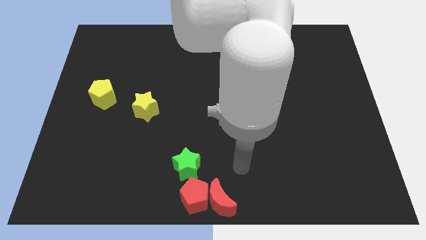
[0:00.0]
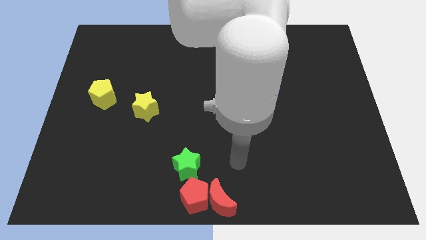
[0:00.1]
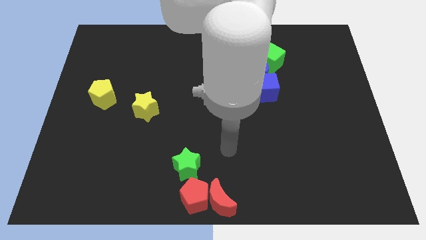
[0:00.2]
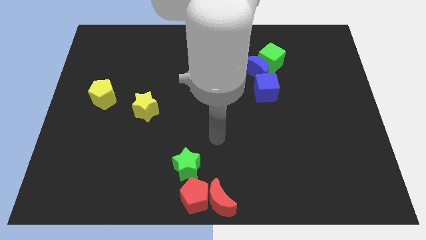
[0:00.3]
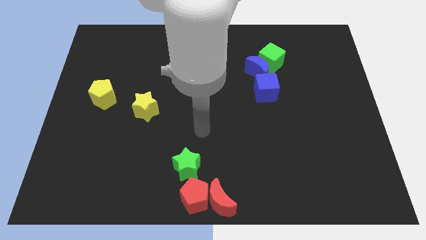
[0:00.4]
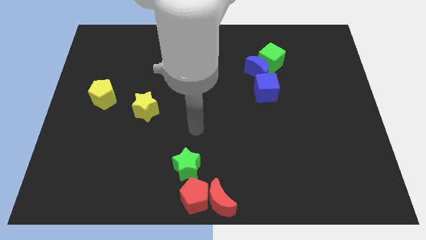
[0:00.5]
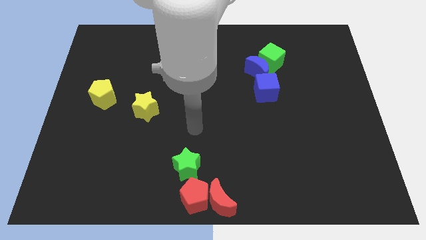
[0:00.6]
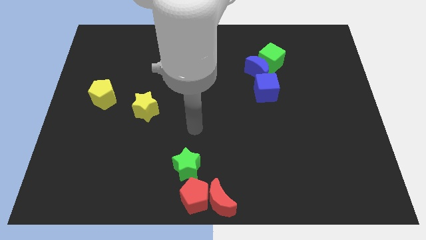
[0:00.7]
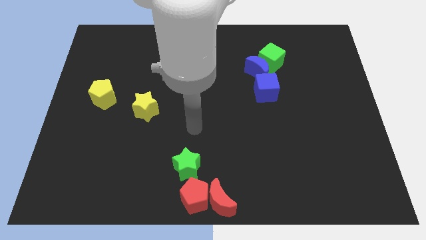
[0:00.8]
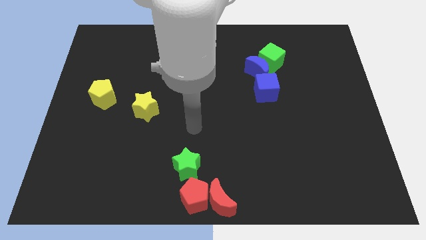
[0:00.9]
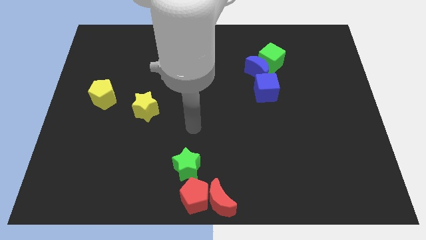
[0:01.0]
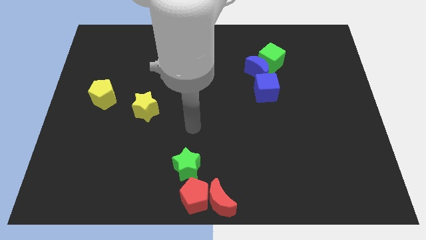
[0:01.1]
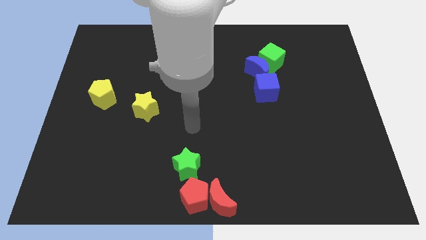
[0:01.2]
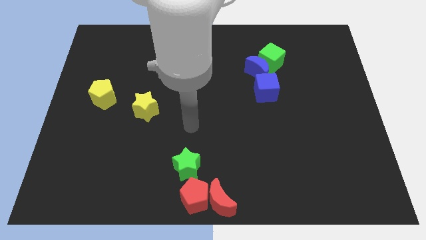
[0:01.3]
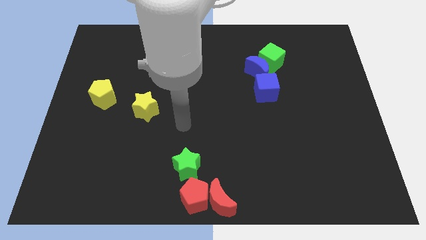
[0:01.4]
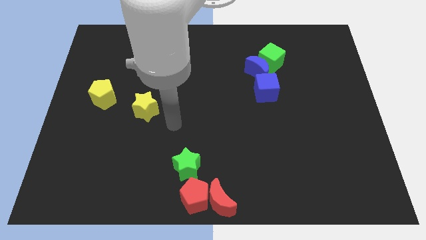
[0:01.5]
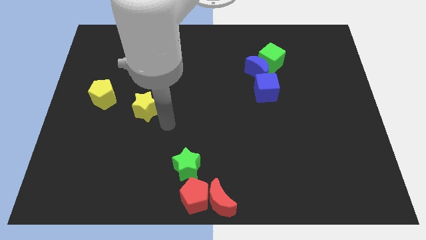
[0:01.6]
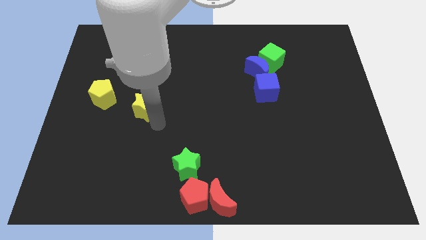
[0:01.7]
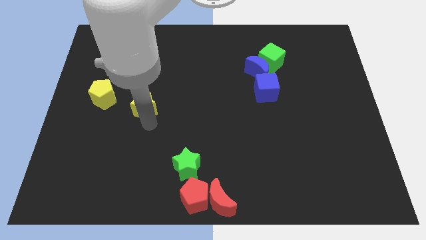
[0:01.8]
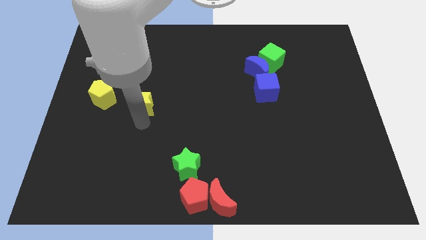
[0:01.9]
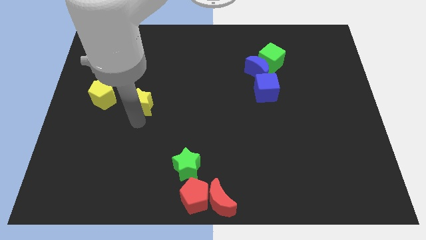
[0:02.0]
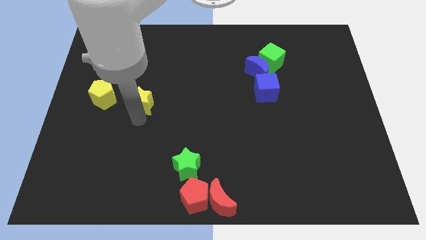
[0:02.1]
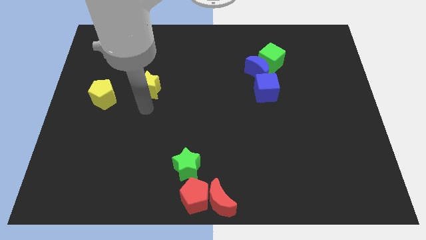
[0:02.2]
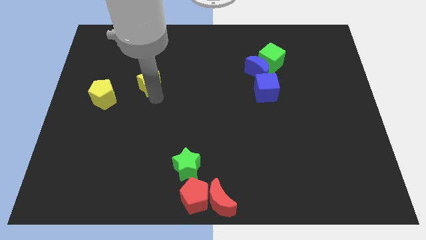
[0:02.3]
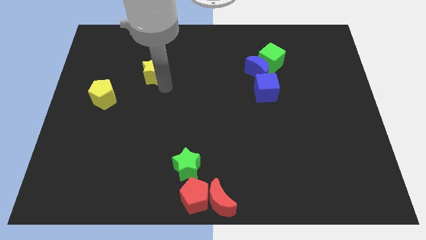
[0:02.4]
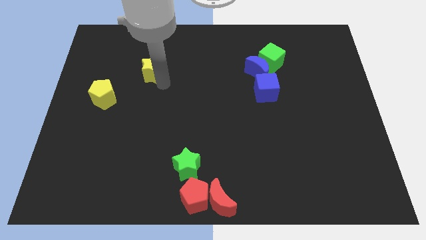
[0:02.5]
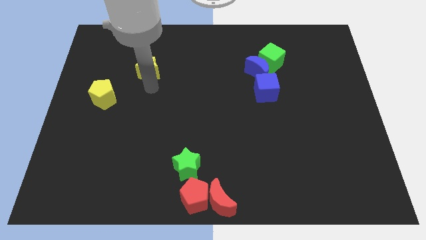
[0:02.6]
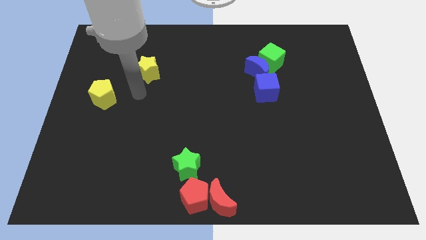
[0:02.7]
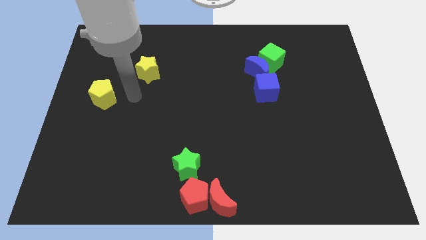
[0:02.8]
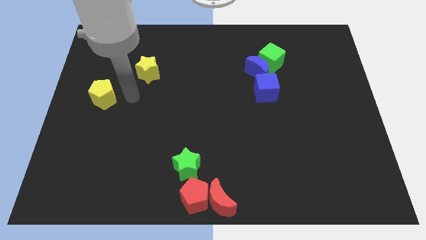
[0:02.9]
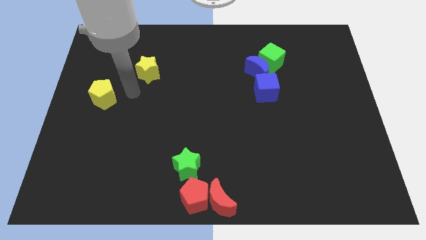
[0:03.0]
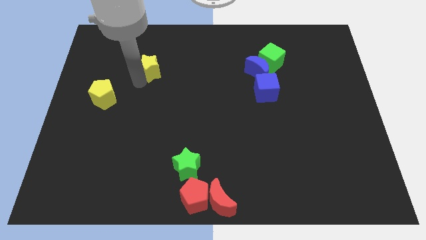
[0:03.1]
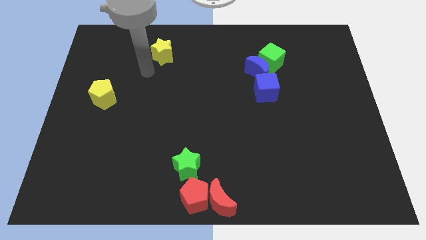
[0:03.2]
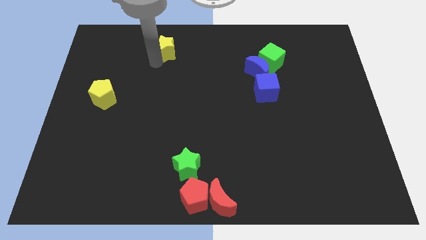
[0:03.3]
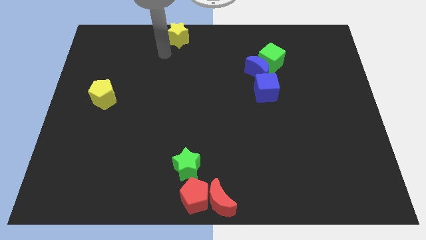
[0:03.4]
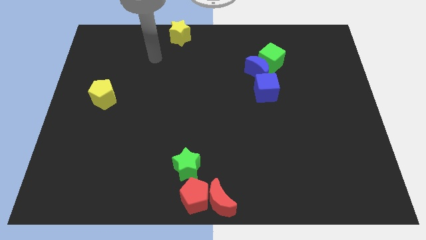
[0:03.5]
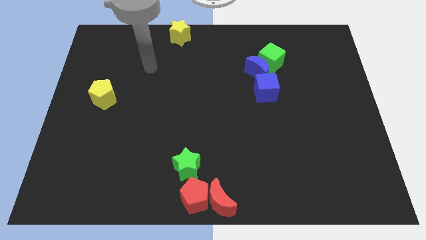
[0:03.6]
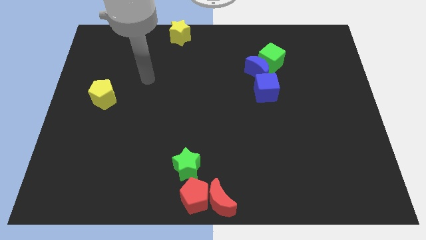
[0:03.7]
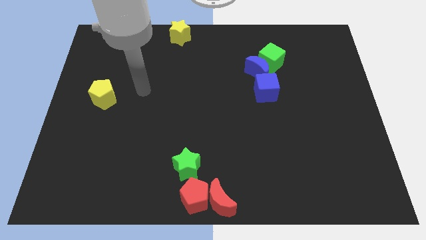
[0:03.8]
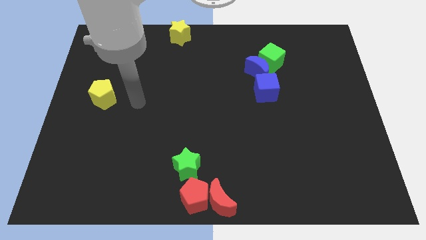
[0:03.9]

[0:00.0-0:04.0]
move the yellow star to the top center of the board

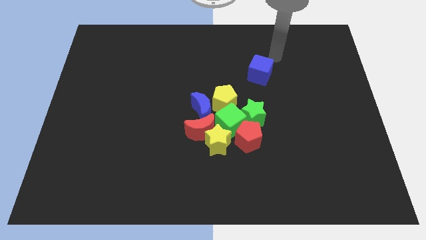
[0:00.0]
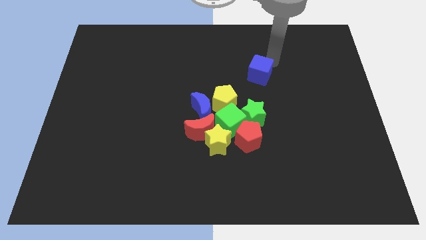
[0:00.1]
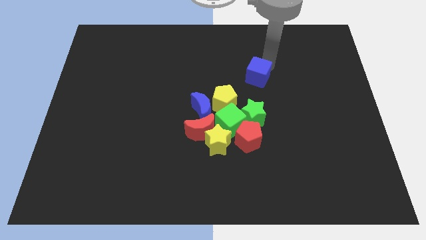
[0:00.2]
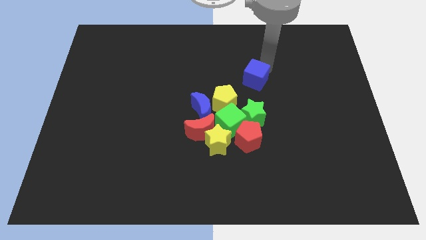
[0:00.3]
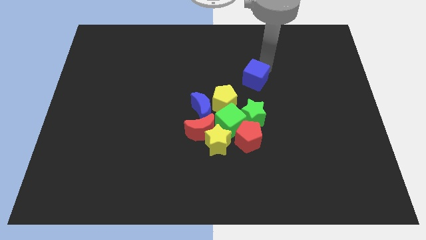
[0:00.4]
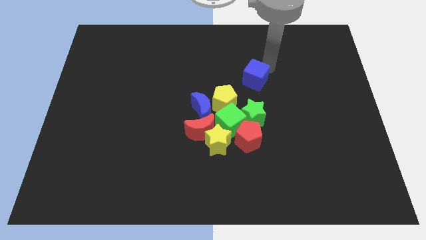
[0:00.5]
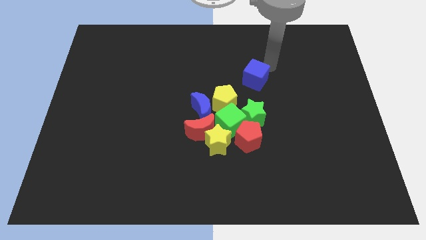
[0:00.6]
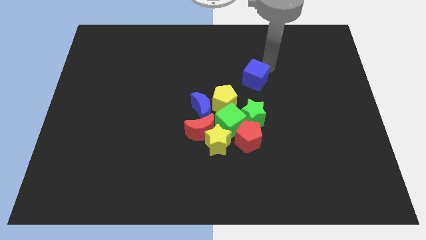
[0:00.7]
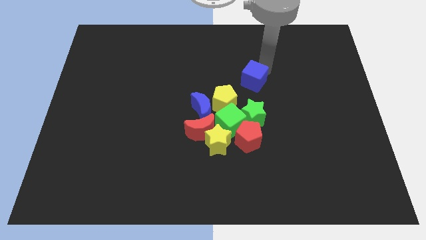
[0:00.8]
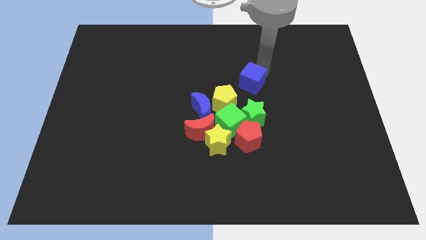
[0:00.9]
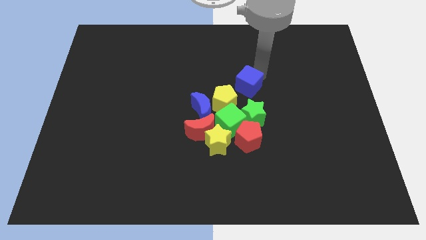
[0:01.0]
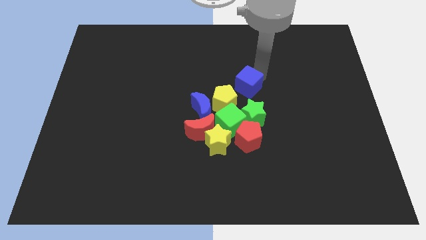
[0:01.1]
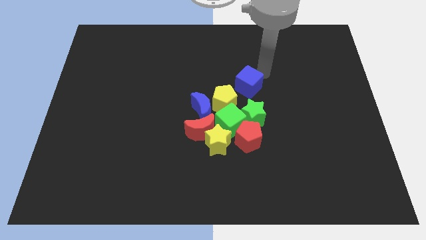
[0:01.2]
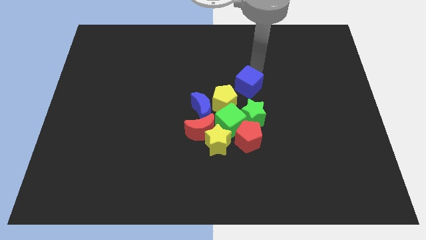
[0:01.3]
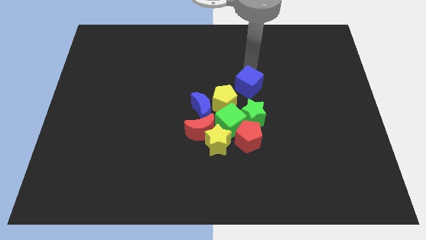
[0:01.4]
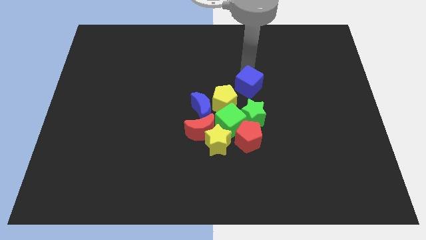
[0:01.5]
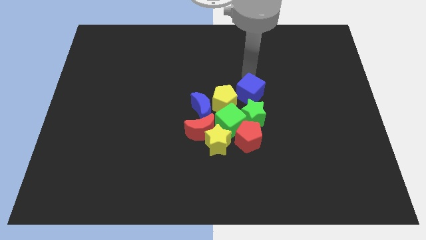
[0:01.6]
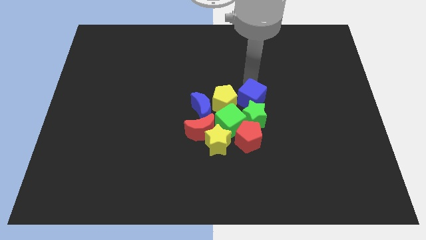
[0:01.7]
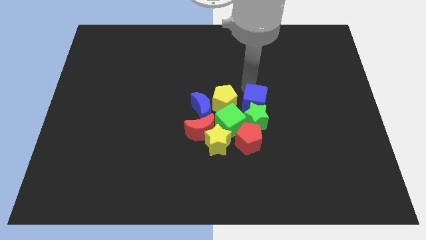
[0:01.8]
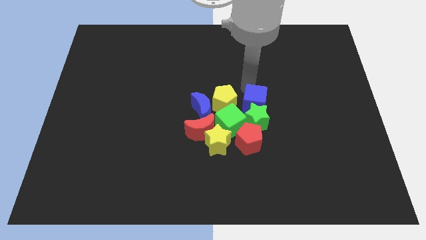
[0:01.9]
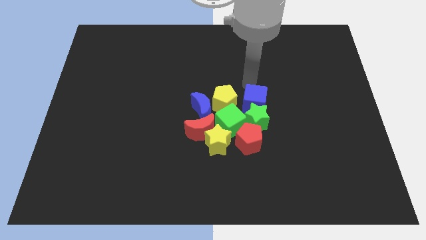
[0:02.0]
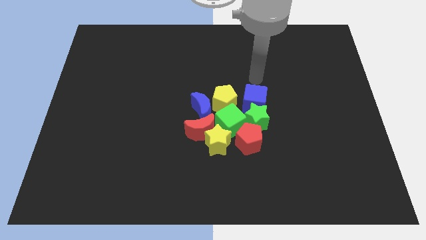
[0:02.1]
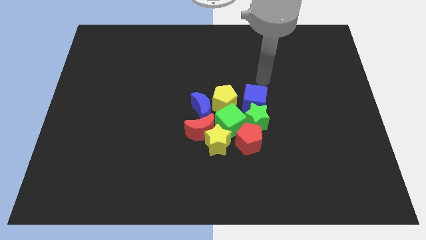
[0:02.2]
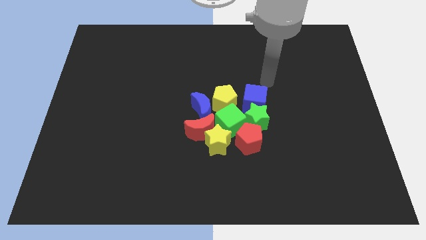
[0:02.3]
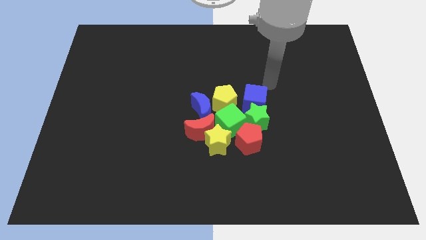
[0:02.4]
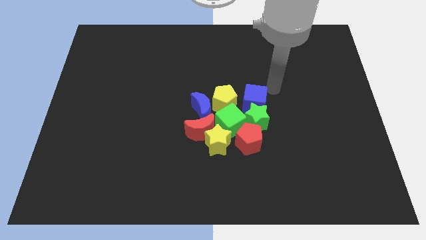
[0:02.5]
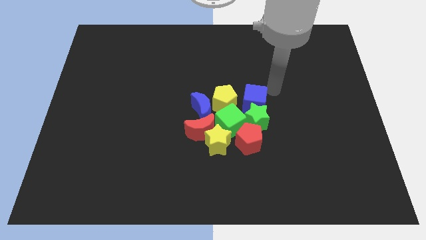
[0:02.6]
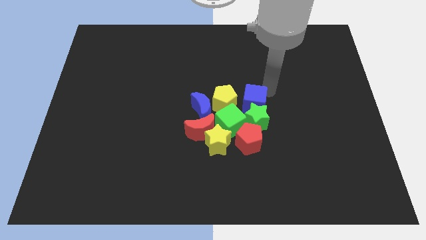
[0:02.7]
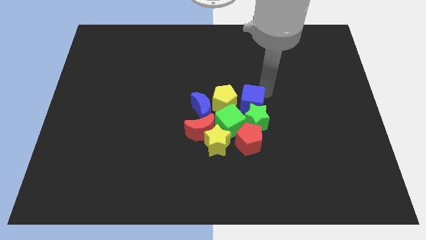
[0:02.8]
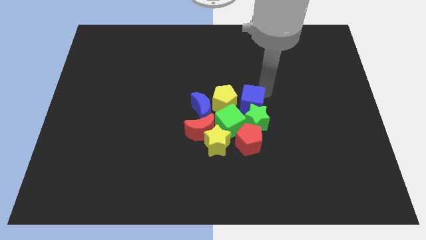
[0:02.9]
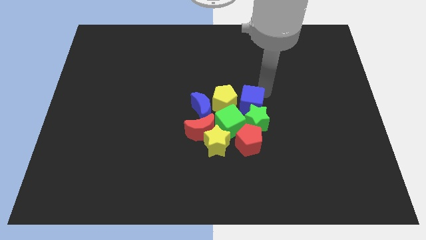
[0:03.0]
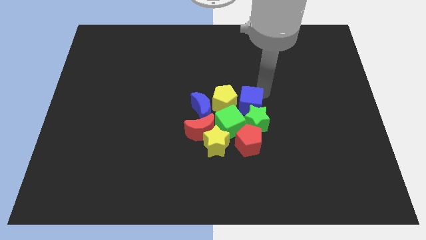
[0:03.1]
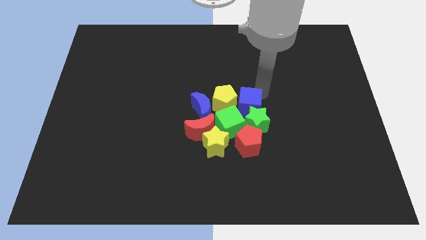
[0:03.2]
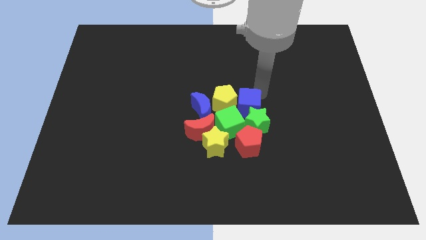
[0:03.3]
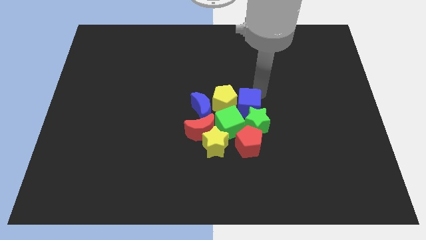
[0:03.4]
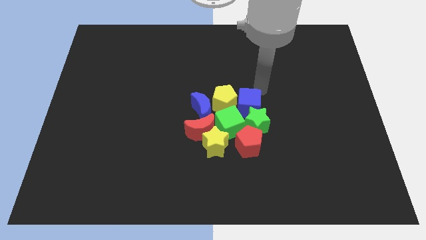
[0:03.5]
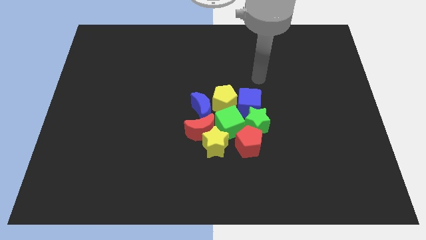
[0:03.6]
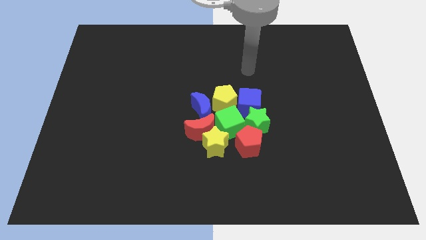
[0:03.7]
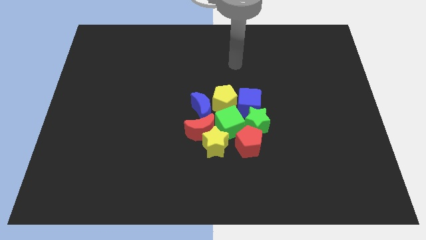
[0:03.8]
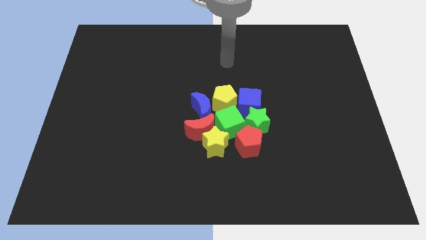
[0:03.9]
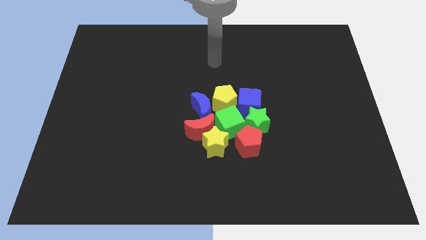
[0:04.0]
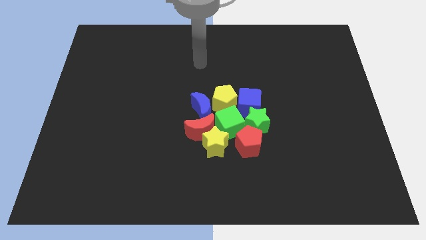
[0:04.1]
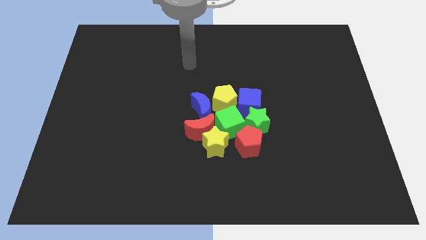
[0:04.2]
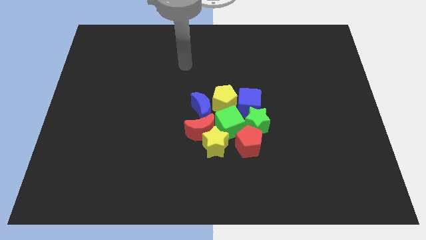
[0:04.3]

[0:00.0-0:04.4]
push the blue cube into the green star

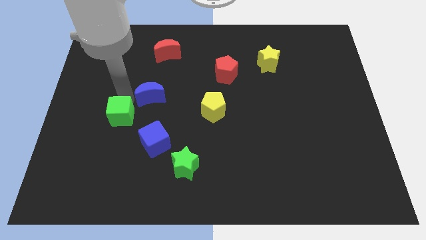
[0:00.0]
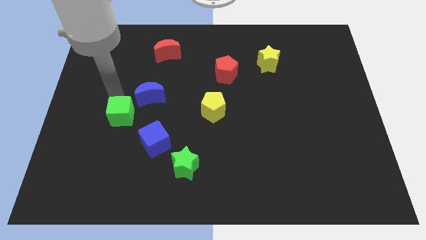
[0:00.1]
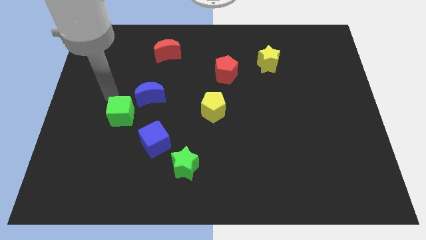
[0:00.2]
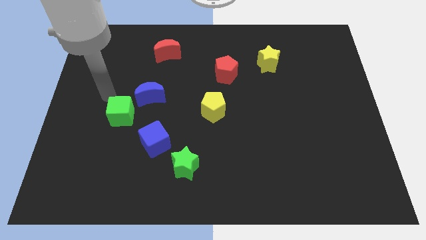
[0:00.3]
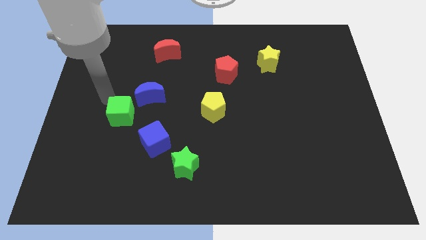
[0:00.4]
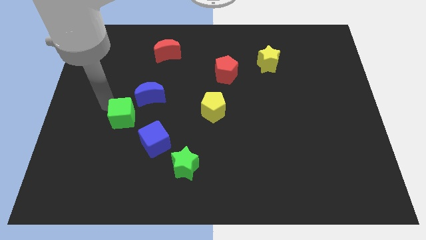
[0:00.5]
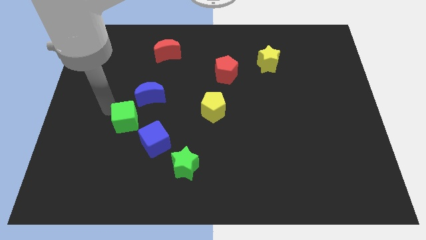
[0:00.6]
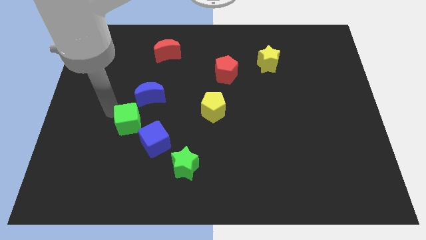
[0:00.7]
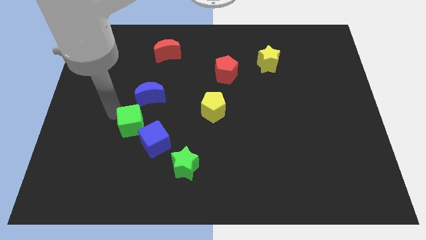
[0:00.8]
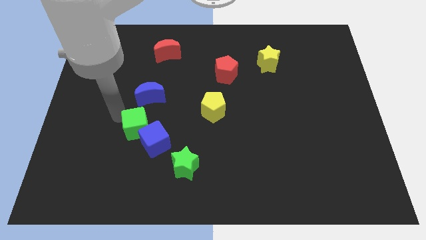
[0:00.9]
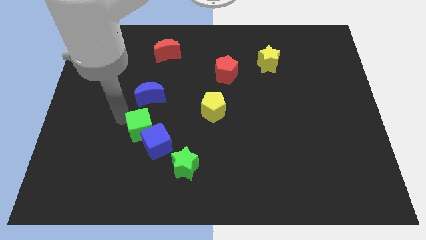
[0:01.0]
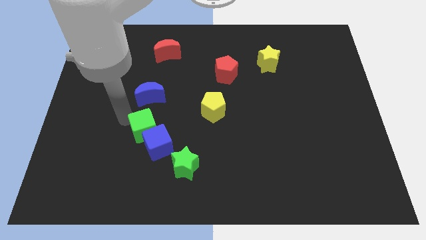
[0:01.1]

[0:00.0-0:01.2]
push the green cube in to the blue cube
